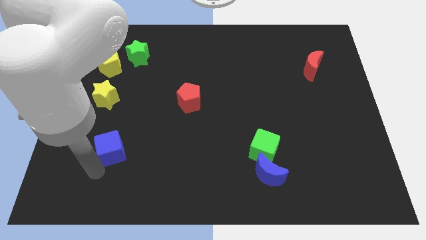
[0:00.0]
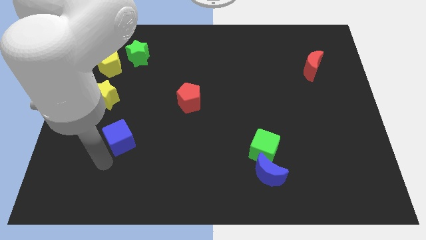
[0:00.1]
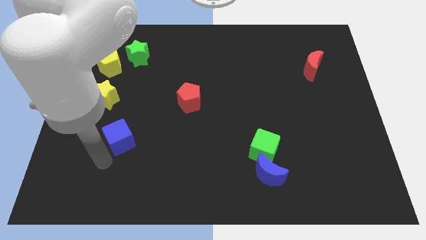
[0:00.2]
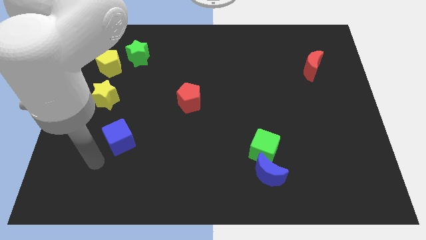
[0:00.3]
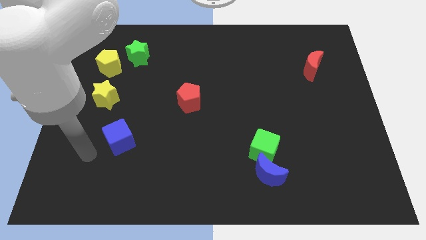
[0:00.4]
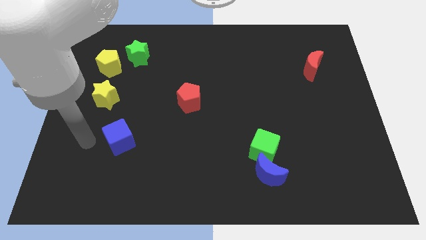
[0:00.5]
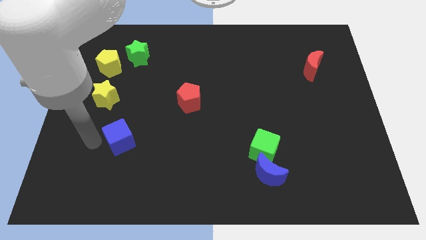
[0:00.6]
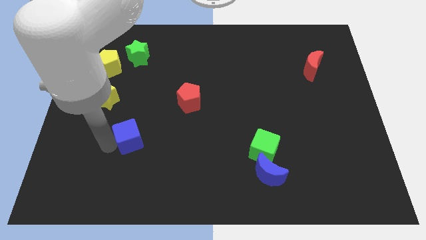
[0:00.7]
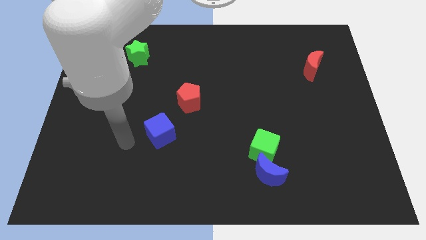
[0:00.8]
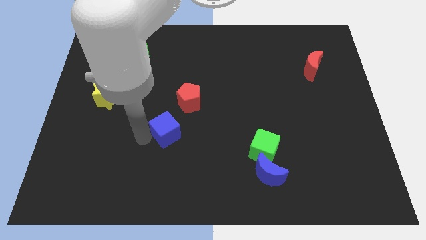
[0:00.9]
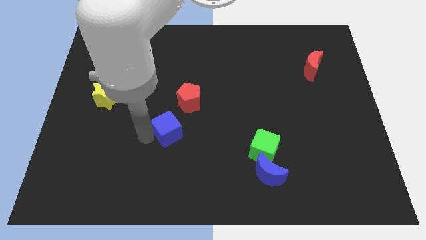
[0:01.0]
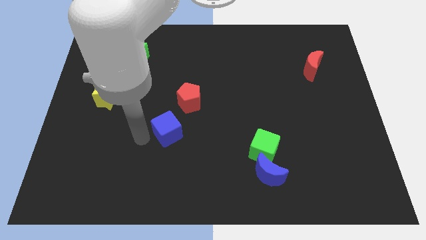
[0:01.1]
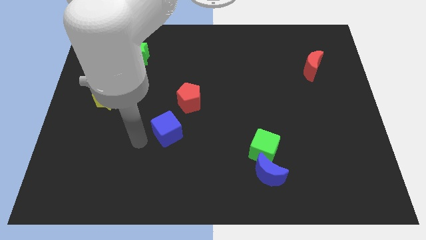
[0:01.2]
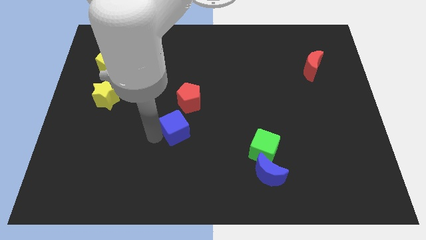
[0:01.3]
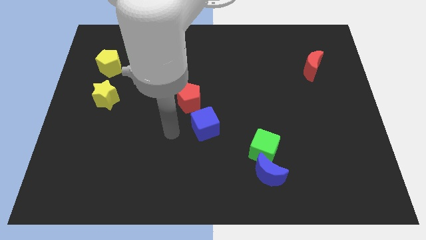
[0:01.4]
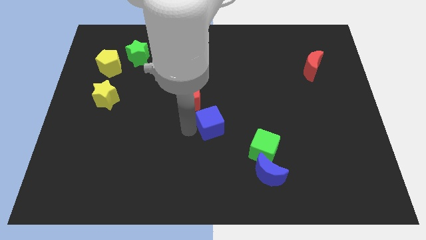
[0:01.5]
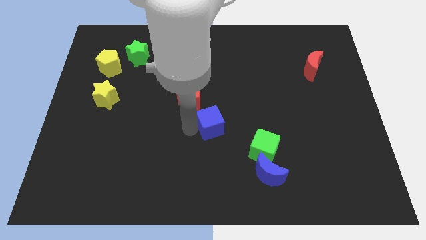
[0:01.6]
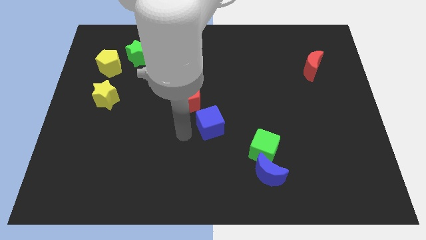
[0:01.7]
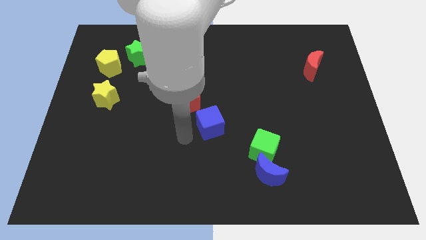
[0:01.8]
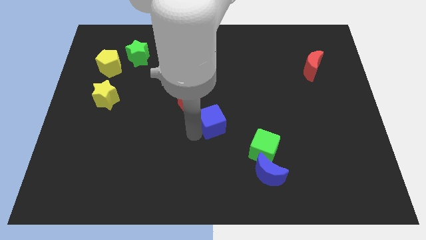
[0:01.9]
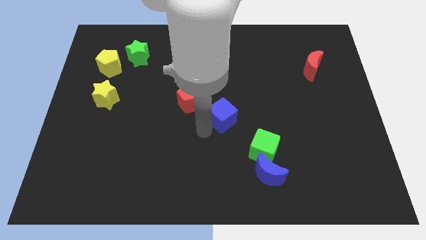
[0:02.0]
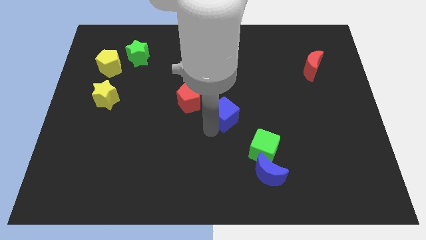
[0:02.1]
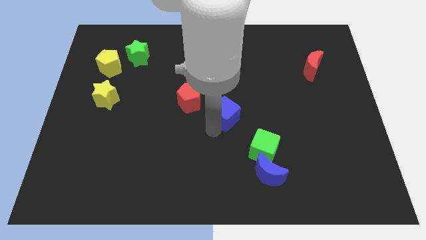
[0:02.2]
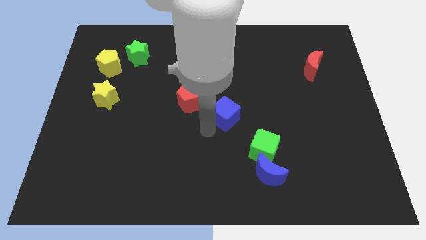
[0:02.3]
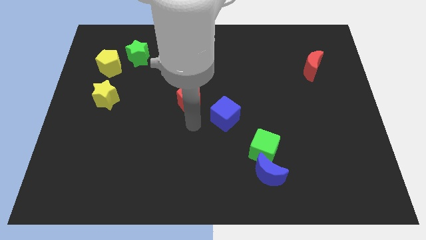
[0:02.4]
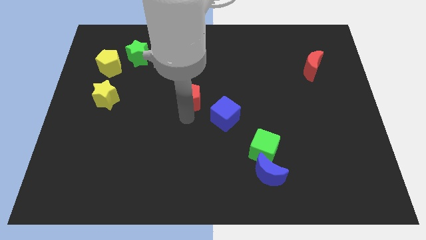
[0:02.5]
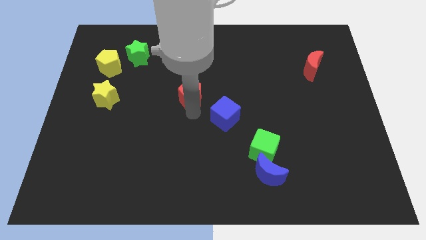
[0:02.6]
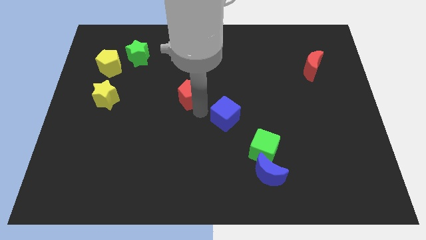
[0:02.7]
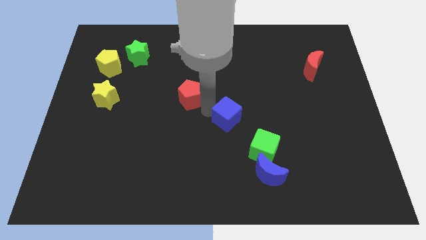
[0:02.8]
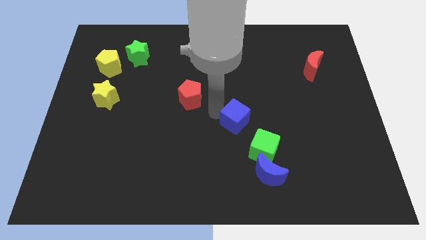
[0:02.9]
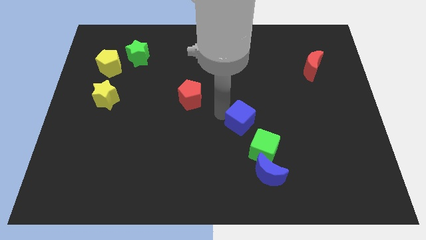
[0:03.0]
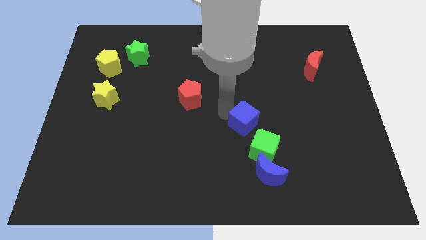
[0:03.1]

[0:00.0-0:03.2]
place the blue cube diagonally bottom right to the red pentagon

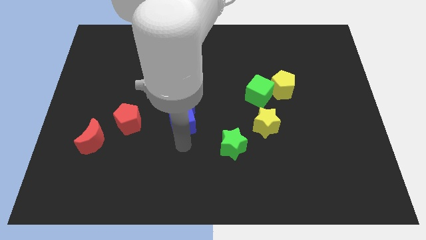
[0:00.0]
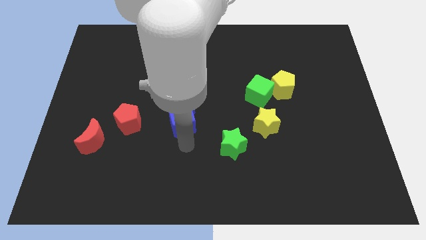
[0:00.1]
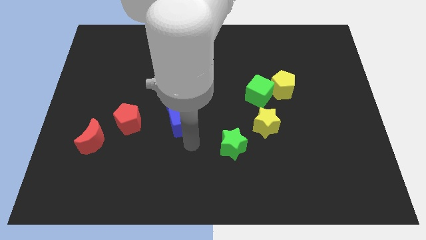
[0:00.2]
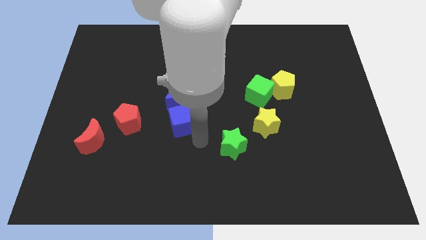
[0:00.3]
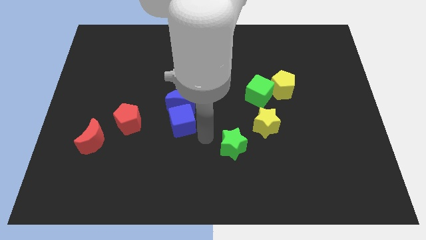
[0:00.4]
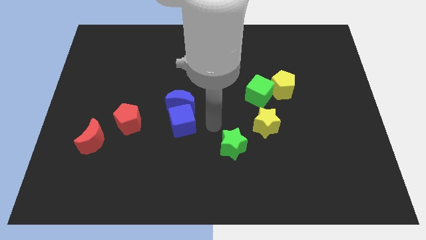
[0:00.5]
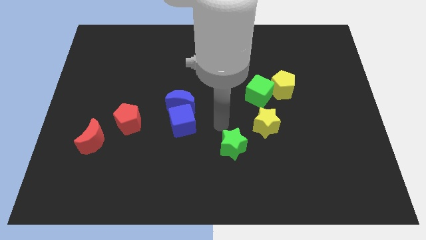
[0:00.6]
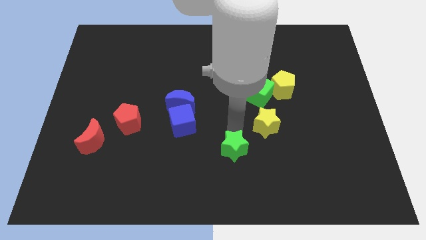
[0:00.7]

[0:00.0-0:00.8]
slightly push the green star towards the bottom side of the board

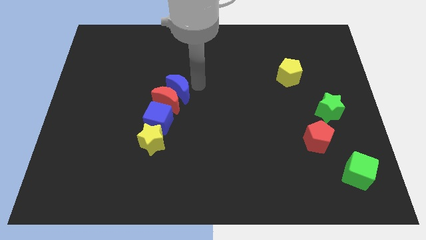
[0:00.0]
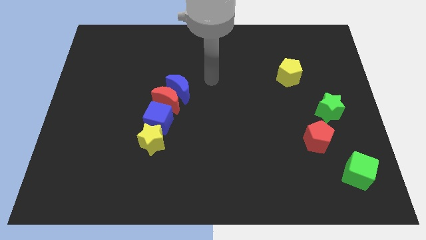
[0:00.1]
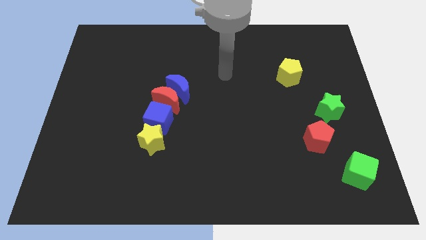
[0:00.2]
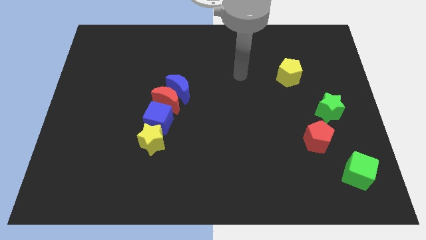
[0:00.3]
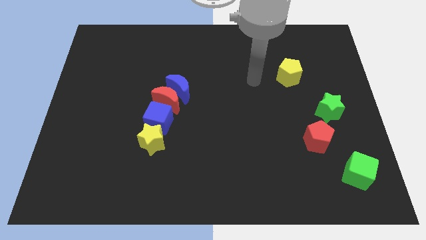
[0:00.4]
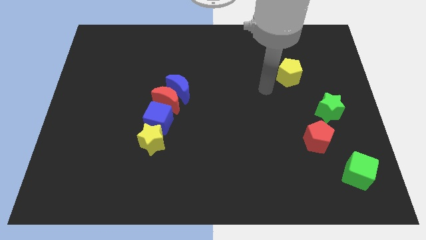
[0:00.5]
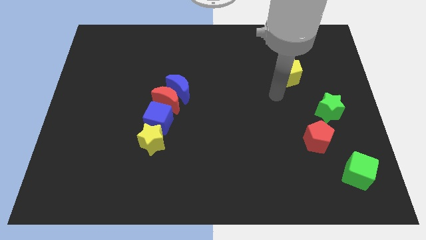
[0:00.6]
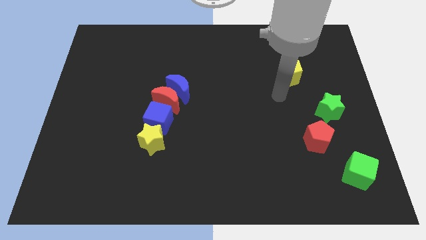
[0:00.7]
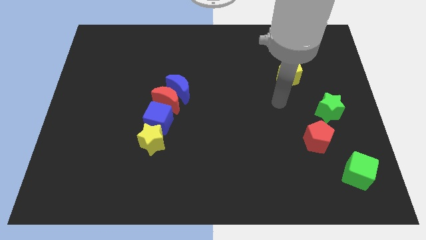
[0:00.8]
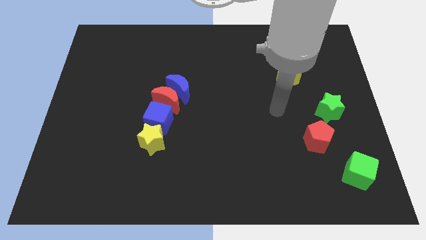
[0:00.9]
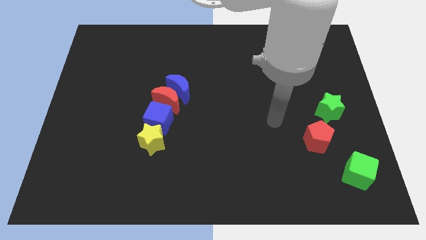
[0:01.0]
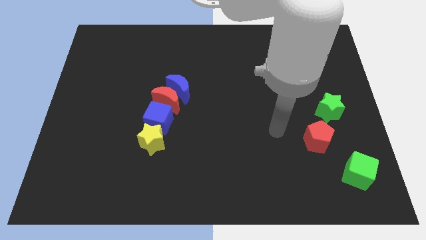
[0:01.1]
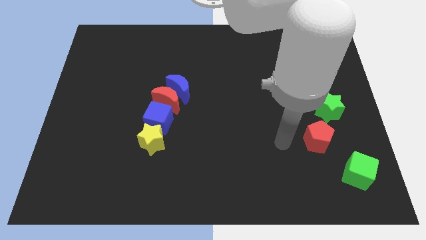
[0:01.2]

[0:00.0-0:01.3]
point your arm at the left of the red pentagon

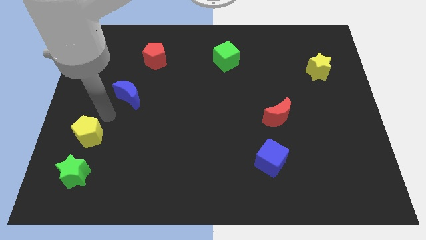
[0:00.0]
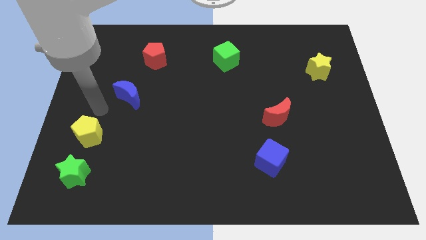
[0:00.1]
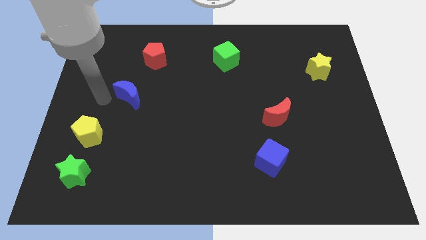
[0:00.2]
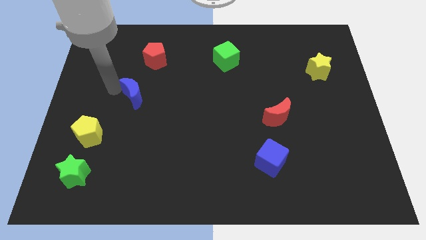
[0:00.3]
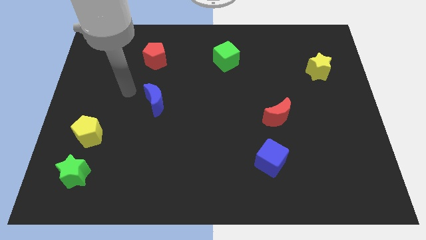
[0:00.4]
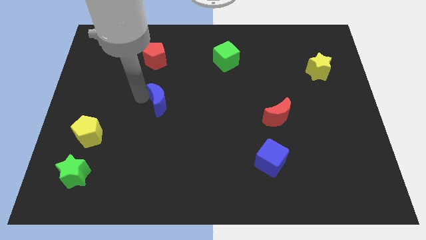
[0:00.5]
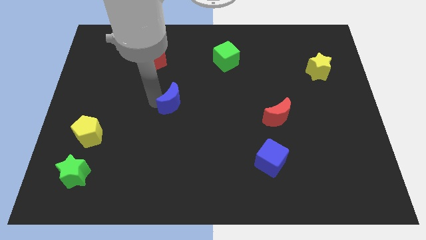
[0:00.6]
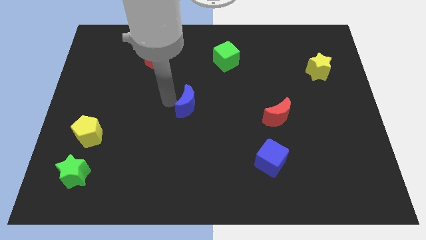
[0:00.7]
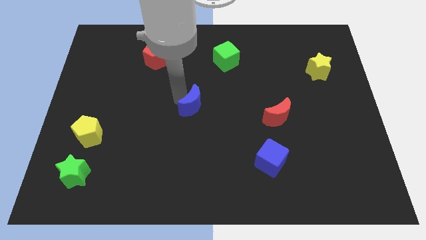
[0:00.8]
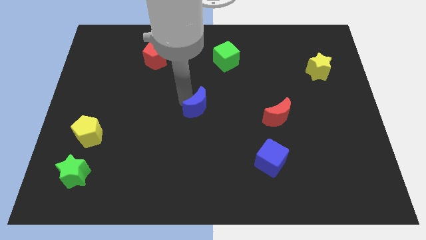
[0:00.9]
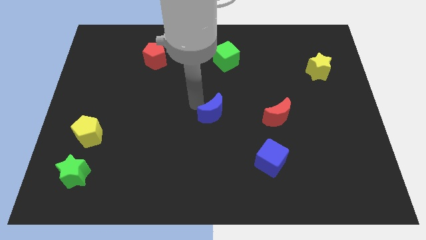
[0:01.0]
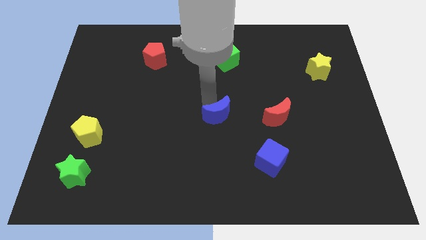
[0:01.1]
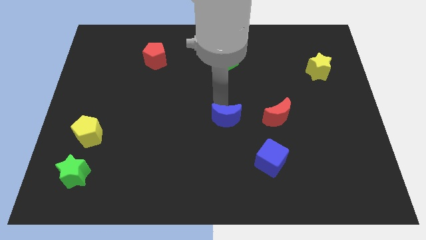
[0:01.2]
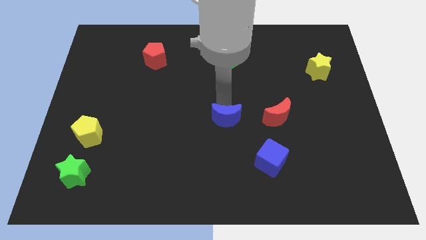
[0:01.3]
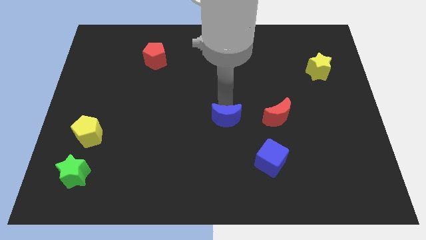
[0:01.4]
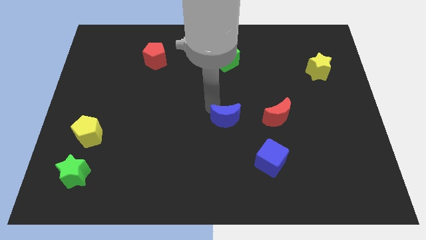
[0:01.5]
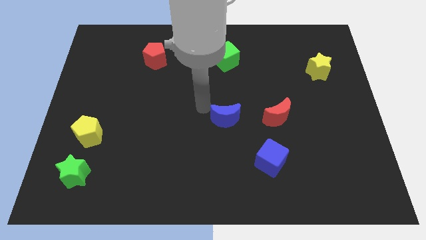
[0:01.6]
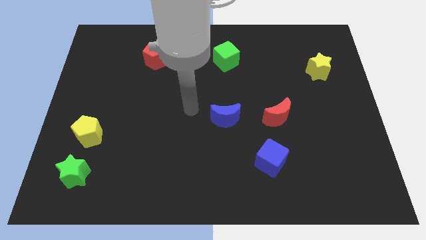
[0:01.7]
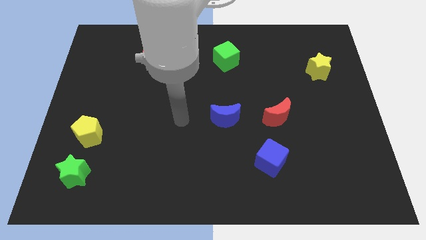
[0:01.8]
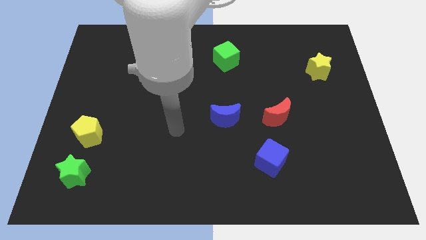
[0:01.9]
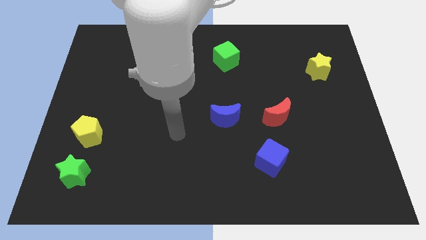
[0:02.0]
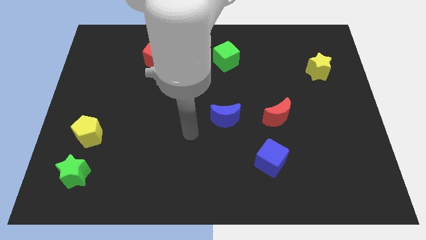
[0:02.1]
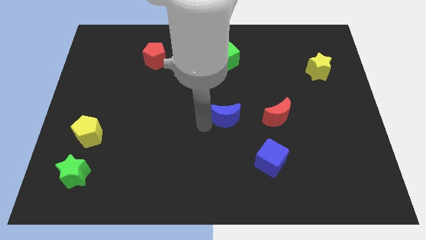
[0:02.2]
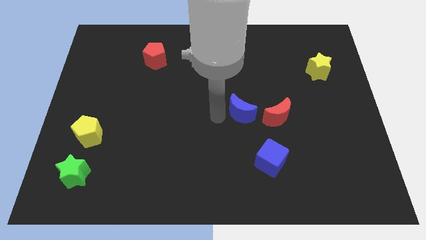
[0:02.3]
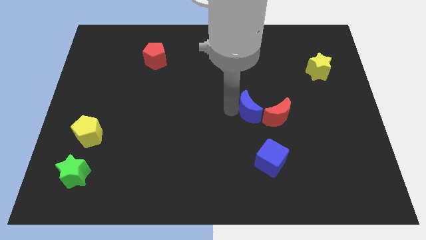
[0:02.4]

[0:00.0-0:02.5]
push the blue crescent to the left of the red crescent

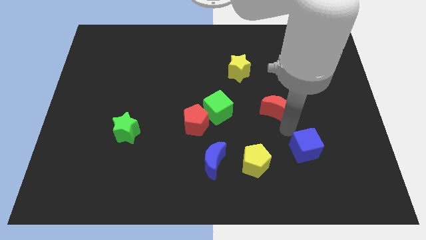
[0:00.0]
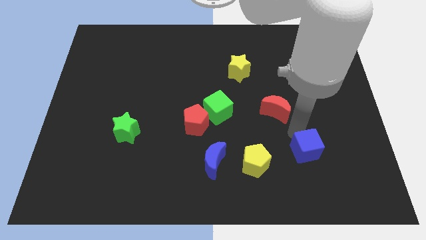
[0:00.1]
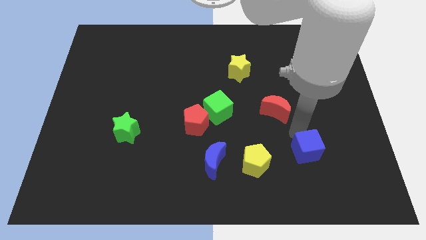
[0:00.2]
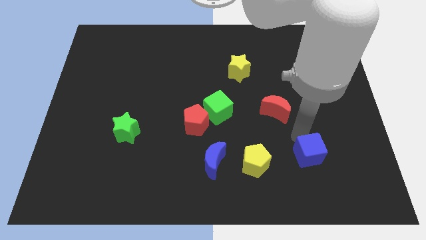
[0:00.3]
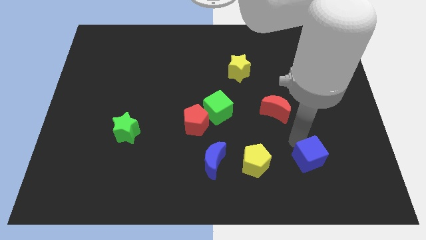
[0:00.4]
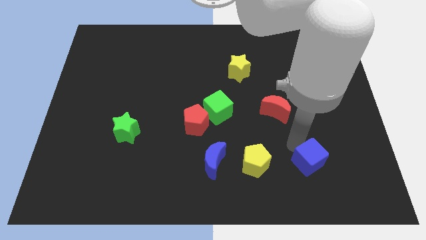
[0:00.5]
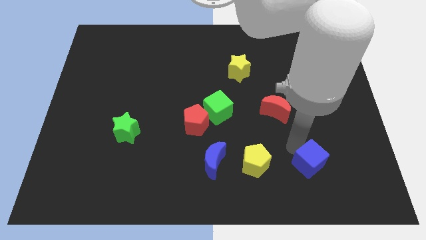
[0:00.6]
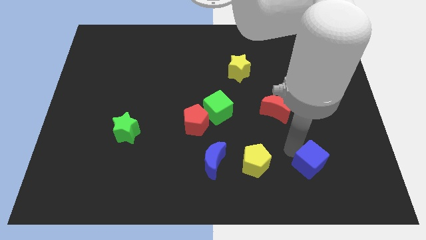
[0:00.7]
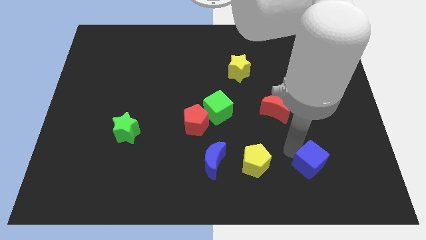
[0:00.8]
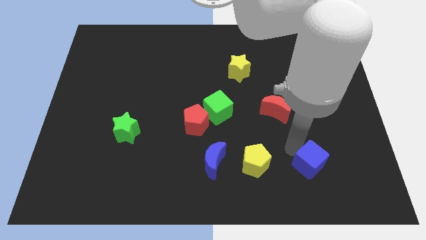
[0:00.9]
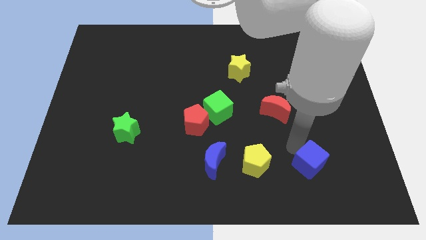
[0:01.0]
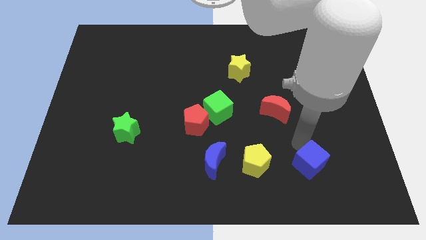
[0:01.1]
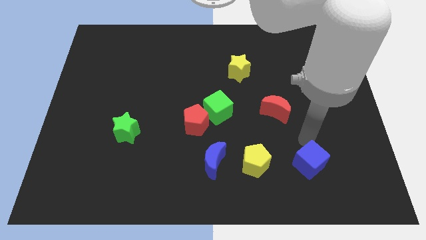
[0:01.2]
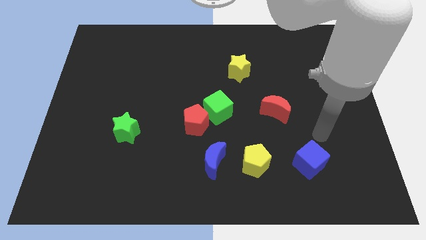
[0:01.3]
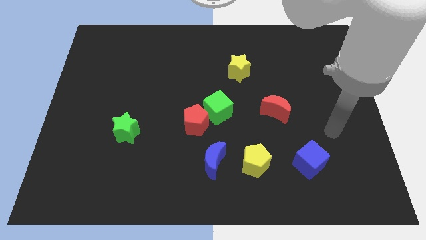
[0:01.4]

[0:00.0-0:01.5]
move the blue cube to the right side of the yellow pentagon
